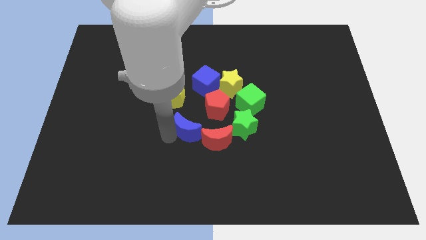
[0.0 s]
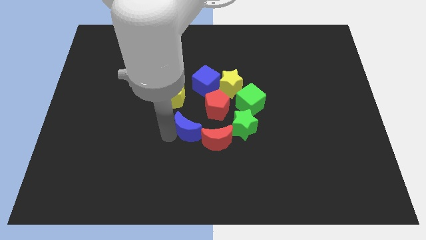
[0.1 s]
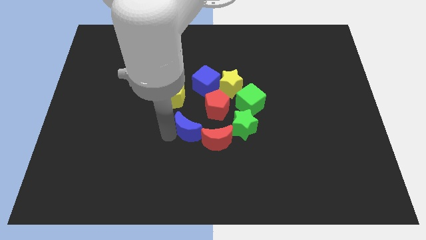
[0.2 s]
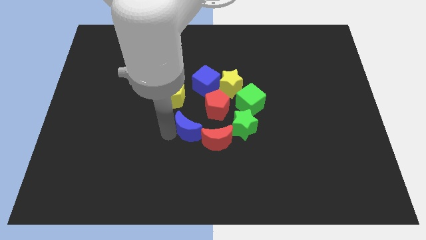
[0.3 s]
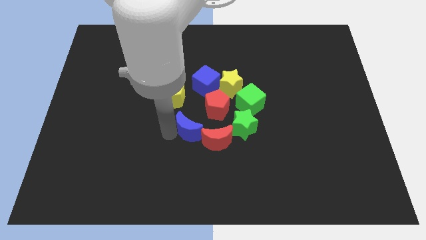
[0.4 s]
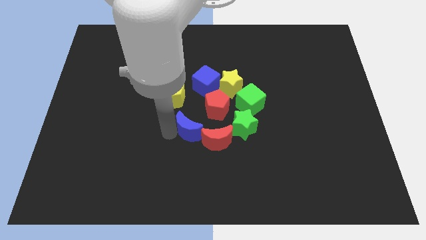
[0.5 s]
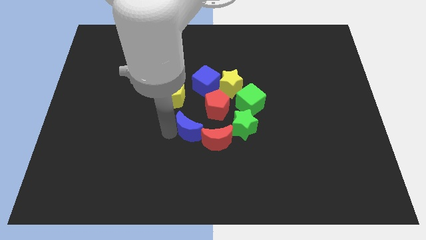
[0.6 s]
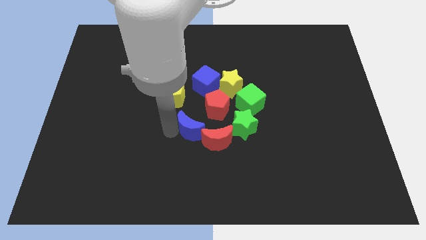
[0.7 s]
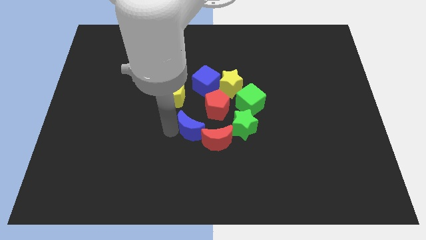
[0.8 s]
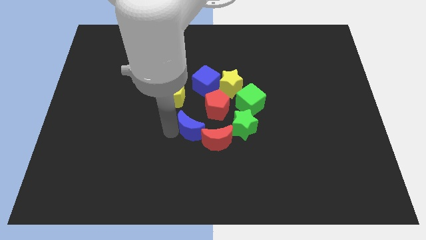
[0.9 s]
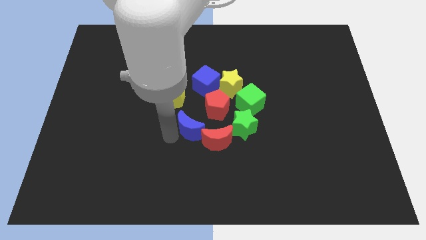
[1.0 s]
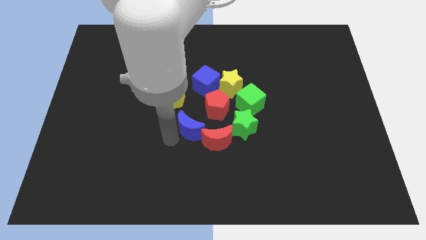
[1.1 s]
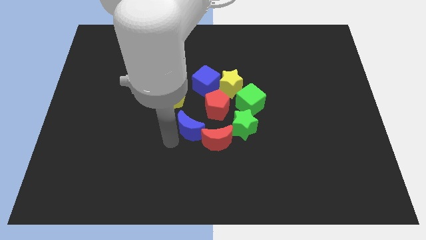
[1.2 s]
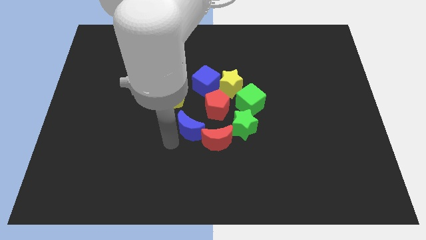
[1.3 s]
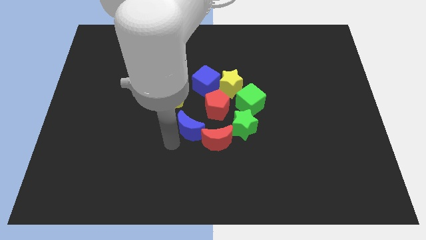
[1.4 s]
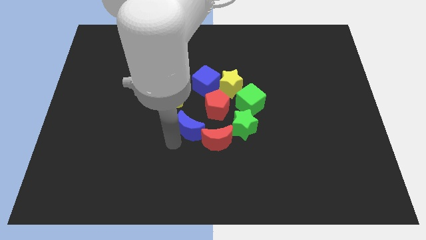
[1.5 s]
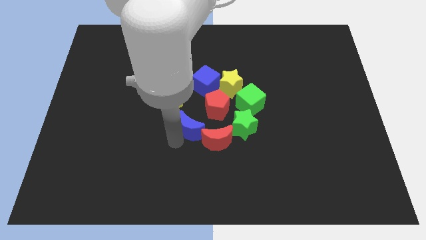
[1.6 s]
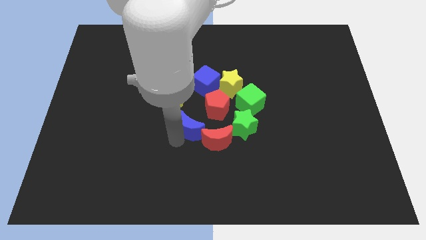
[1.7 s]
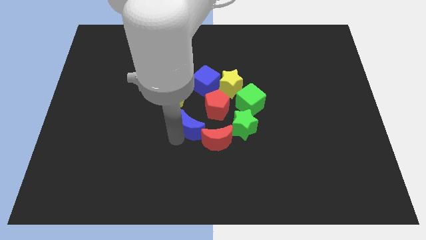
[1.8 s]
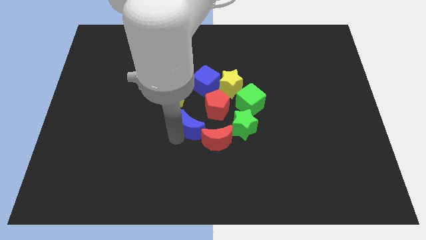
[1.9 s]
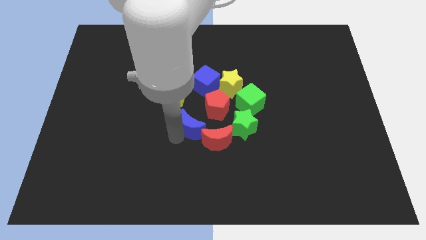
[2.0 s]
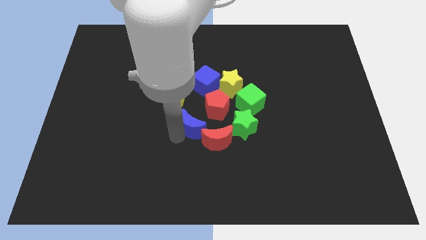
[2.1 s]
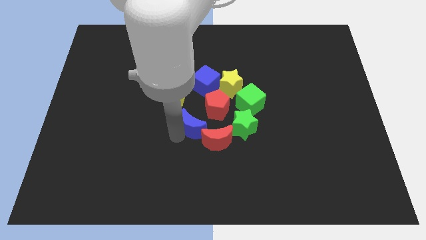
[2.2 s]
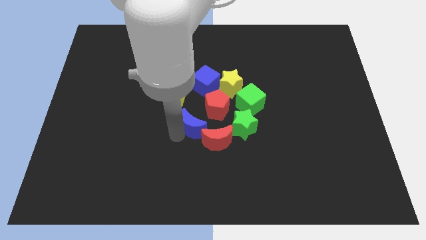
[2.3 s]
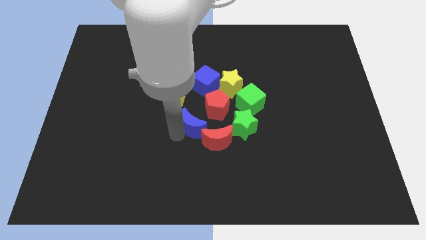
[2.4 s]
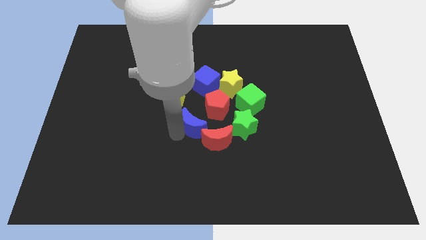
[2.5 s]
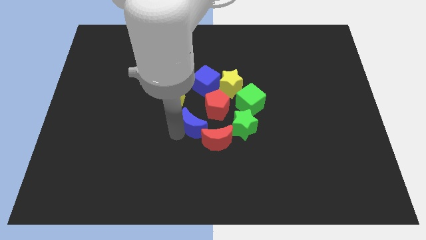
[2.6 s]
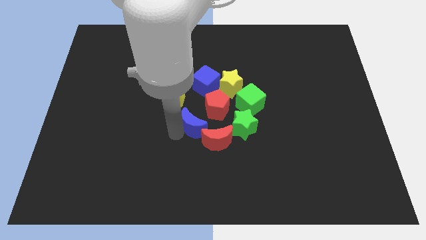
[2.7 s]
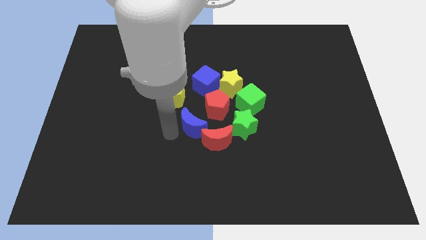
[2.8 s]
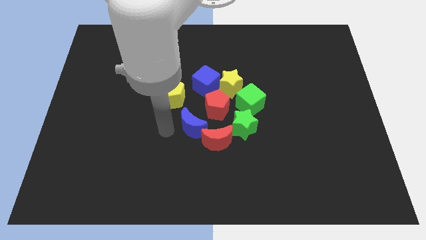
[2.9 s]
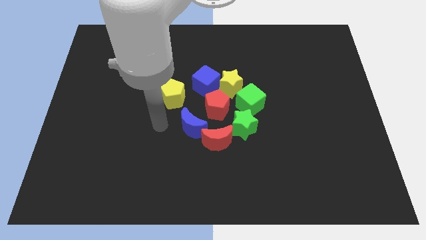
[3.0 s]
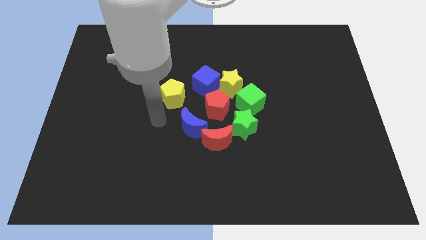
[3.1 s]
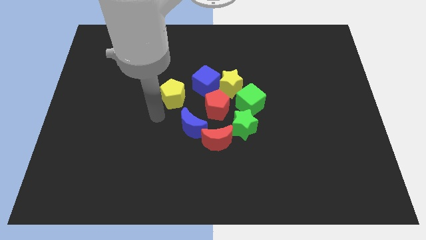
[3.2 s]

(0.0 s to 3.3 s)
move blue crescent slightly to the center

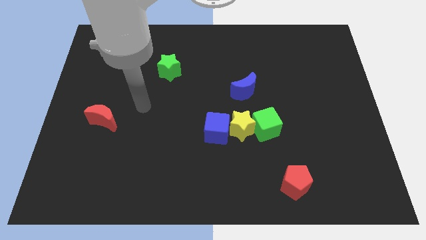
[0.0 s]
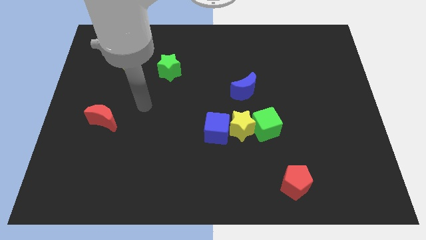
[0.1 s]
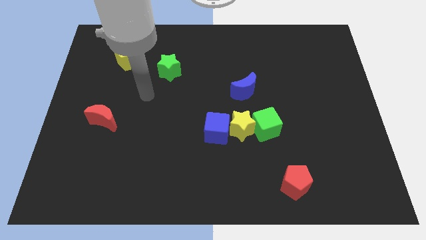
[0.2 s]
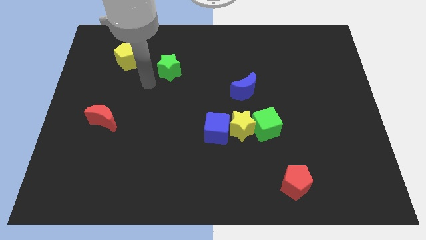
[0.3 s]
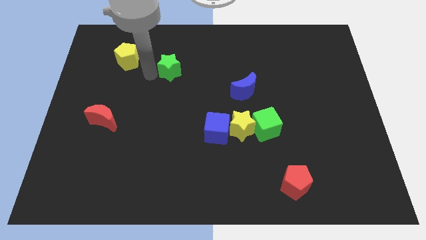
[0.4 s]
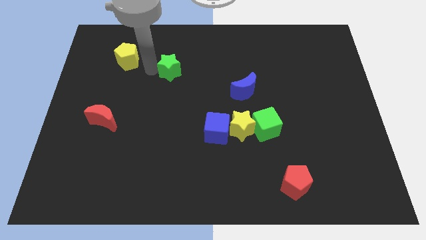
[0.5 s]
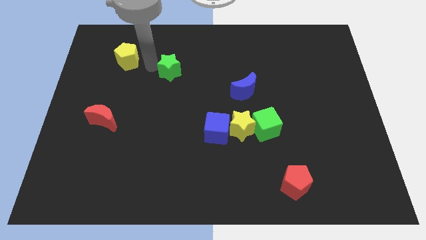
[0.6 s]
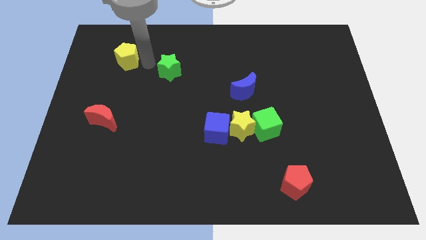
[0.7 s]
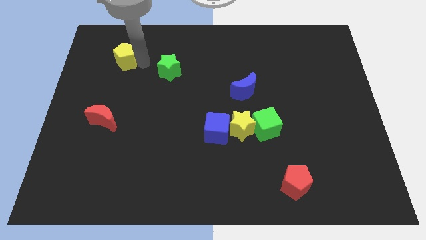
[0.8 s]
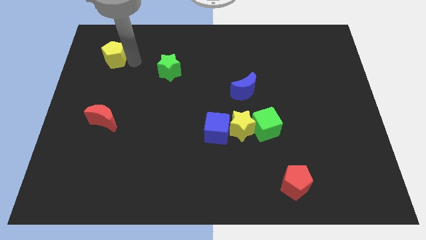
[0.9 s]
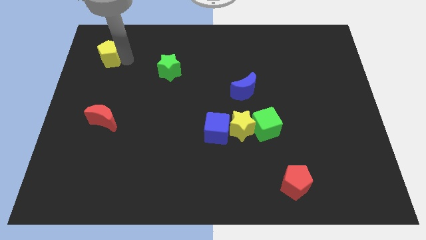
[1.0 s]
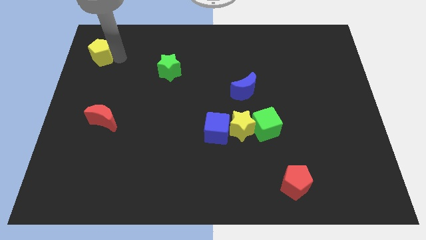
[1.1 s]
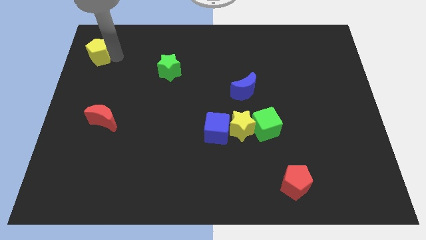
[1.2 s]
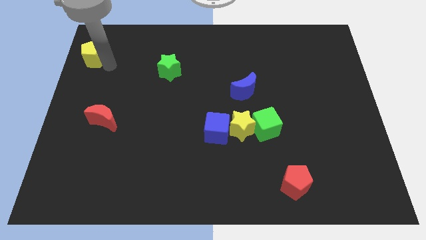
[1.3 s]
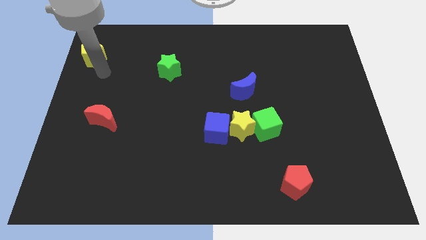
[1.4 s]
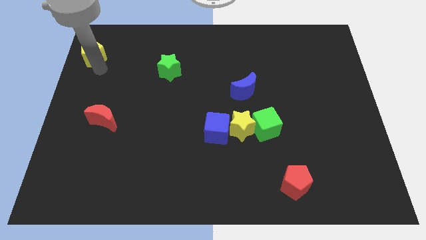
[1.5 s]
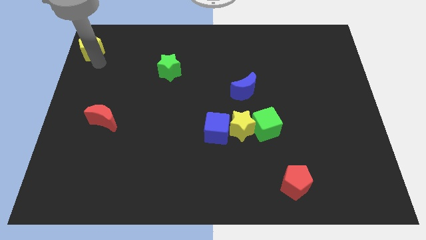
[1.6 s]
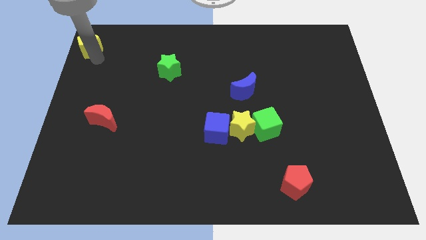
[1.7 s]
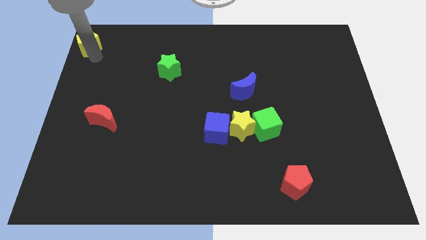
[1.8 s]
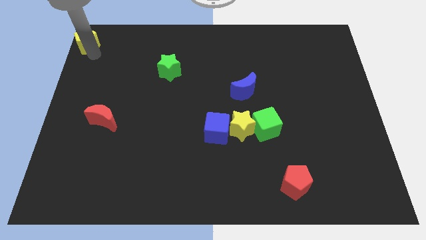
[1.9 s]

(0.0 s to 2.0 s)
drag the yellow pentagon towards the top left corner of the board

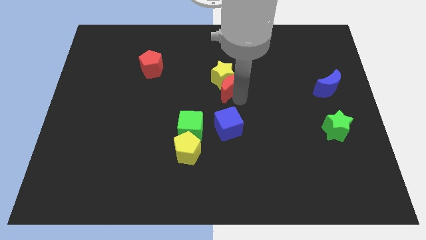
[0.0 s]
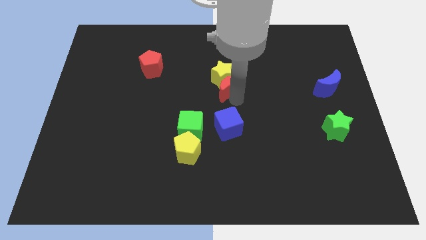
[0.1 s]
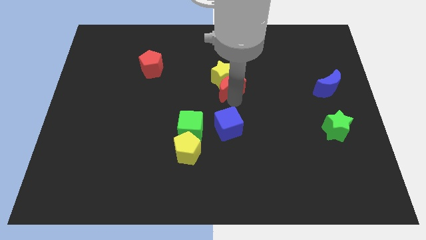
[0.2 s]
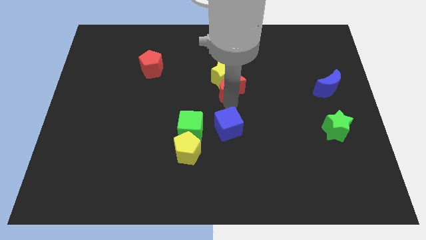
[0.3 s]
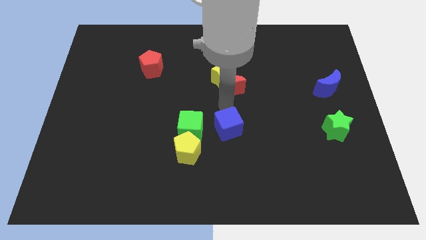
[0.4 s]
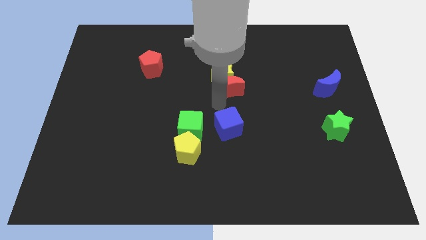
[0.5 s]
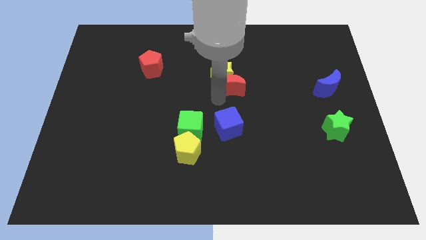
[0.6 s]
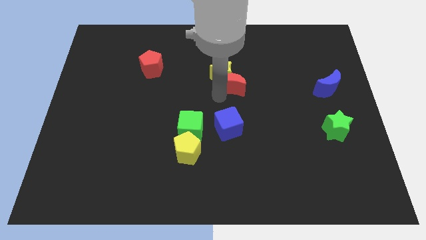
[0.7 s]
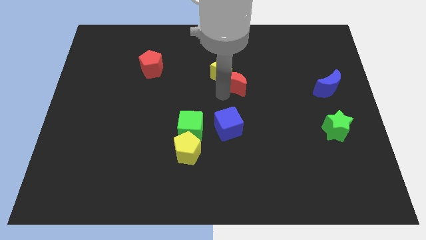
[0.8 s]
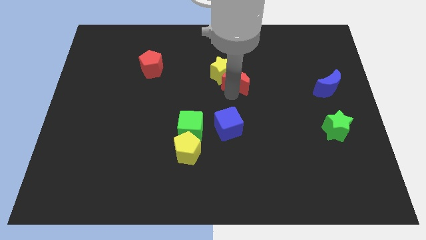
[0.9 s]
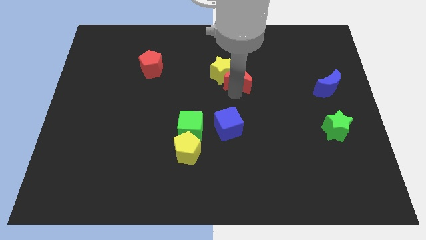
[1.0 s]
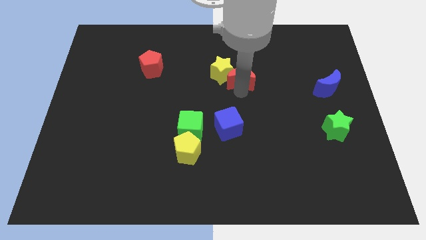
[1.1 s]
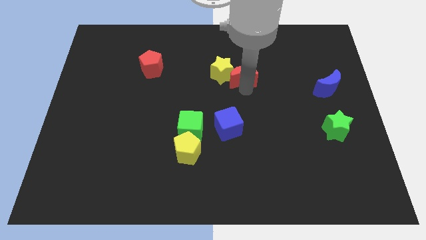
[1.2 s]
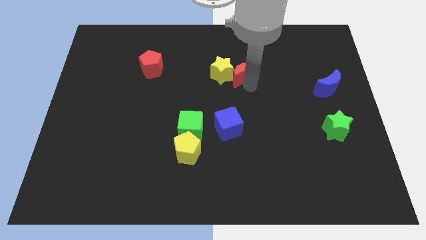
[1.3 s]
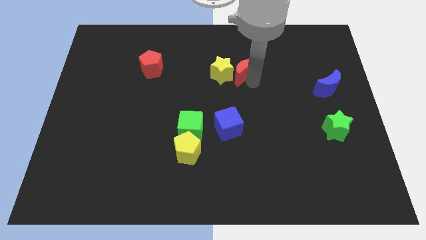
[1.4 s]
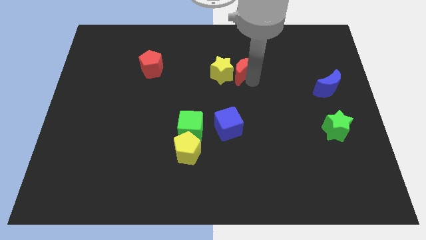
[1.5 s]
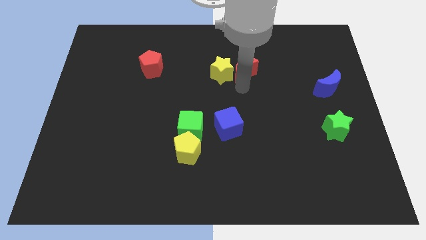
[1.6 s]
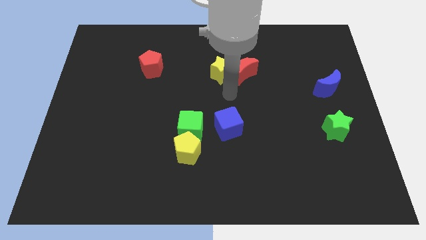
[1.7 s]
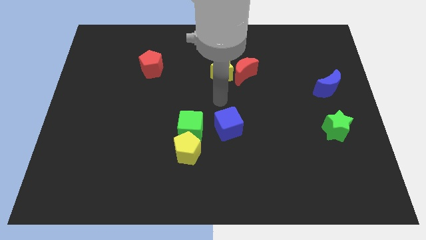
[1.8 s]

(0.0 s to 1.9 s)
put the red moon right to the yellow star

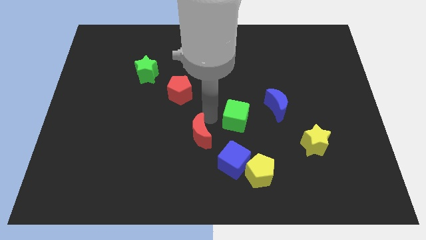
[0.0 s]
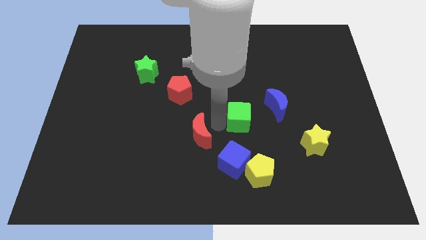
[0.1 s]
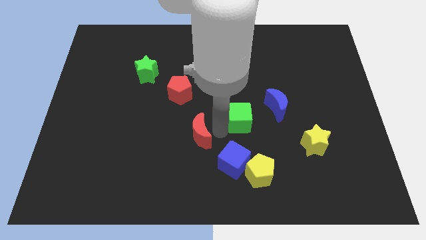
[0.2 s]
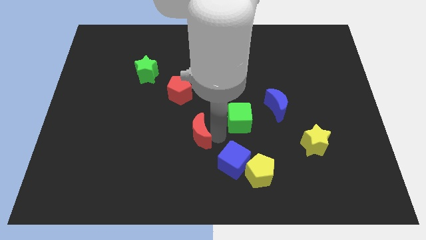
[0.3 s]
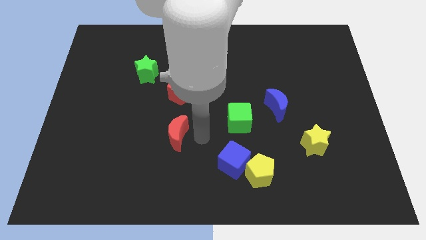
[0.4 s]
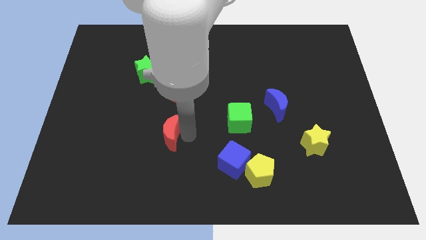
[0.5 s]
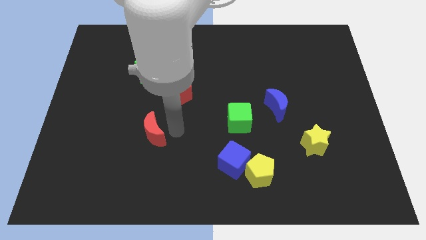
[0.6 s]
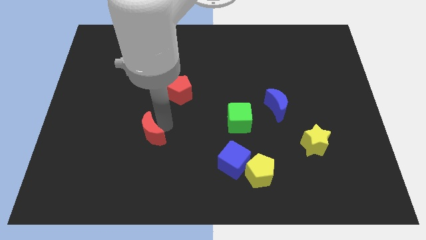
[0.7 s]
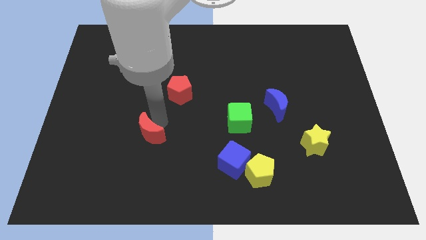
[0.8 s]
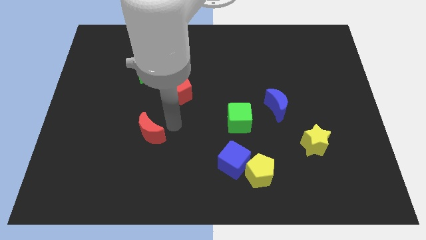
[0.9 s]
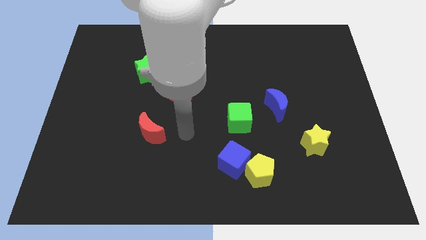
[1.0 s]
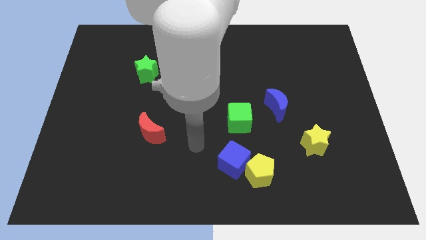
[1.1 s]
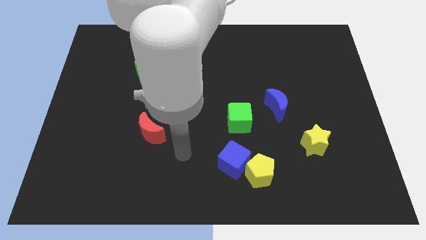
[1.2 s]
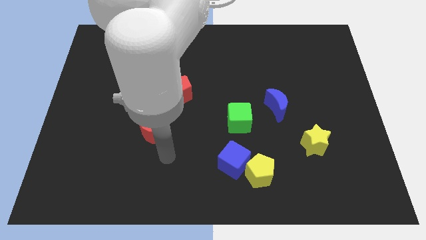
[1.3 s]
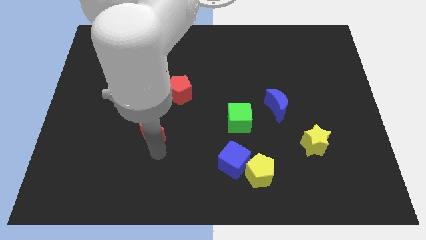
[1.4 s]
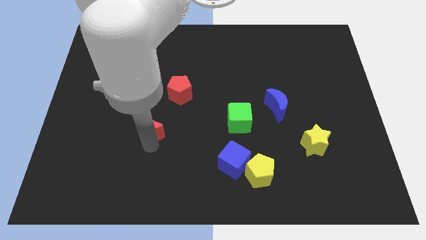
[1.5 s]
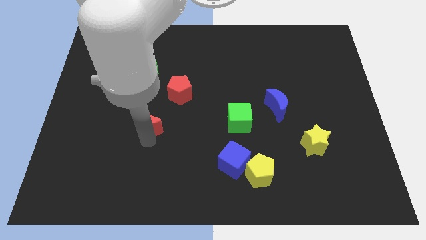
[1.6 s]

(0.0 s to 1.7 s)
place the red crescent horizontally to the left side of the green cube
